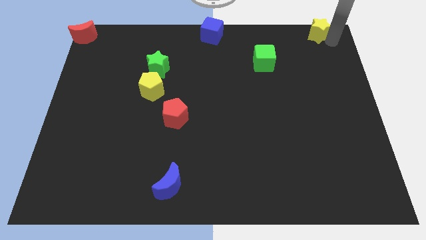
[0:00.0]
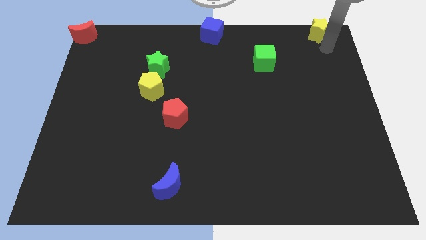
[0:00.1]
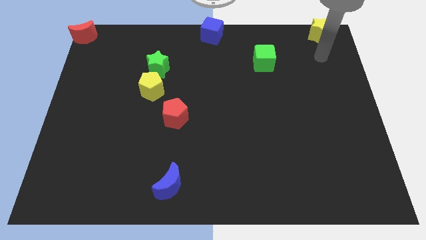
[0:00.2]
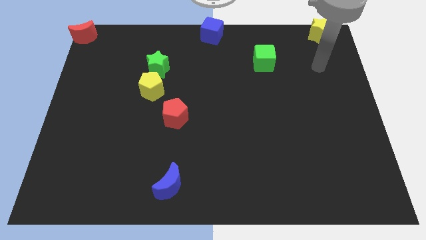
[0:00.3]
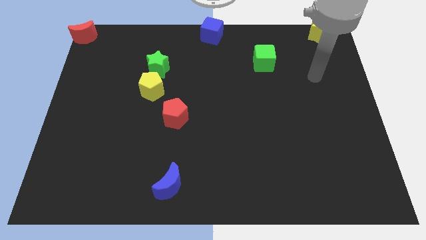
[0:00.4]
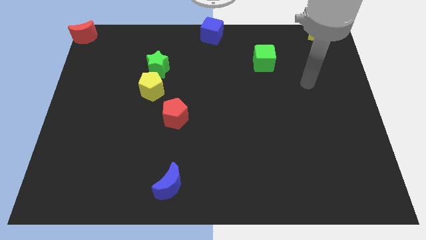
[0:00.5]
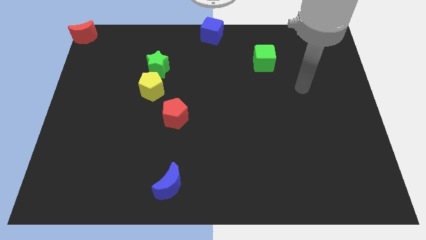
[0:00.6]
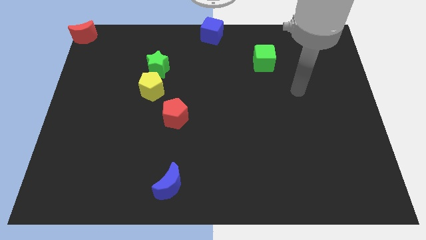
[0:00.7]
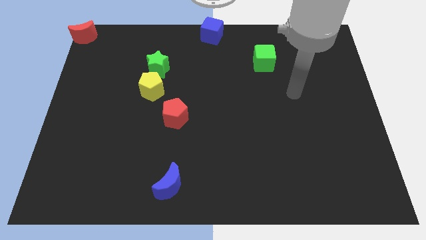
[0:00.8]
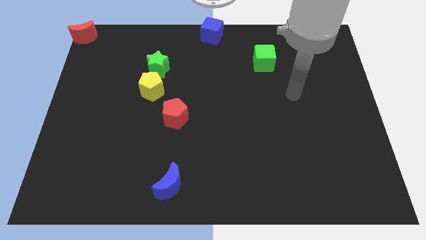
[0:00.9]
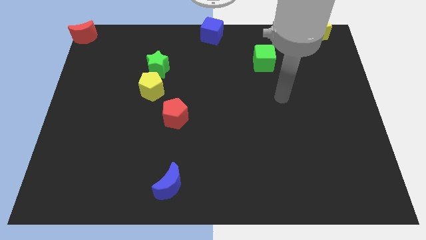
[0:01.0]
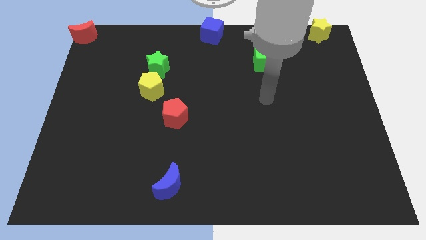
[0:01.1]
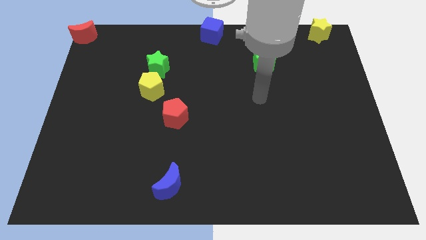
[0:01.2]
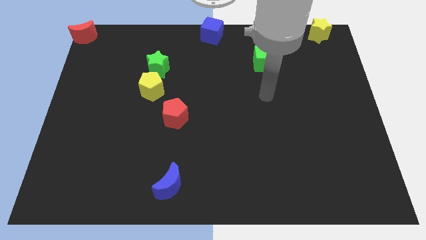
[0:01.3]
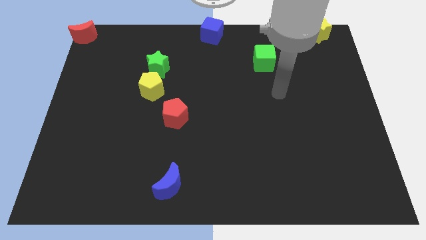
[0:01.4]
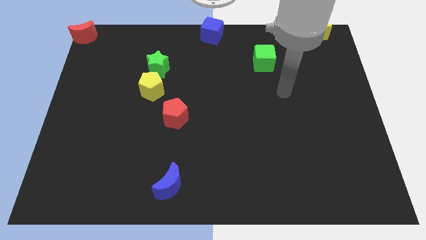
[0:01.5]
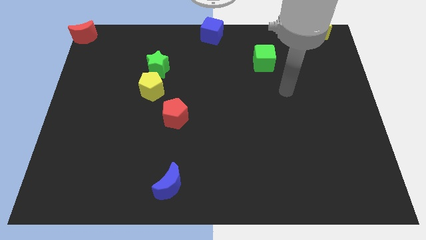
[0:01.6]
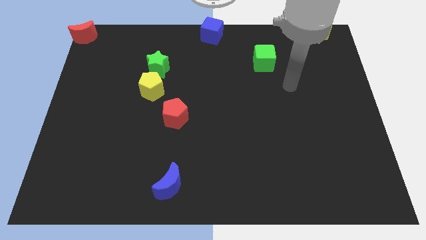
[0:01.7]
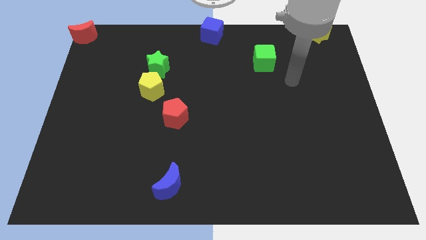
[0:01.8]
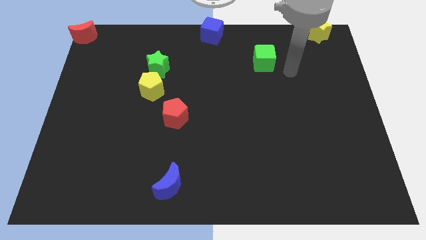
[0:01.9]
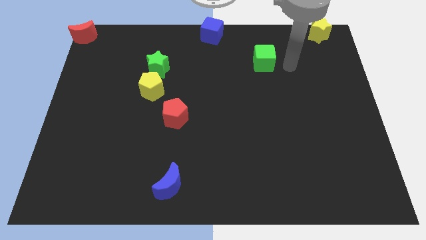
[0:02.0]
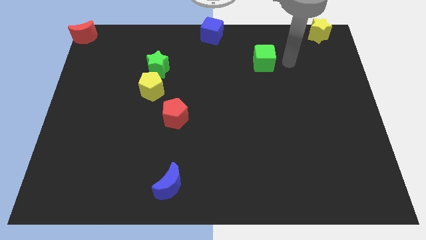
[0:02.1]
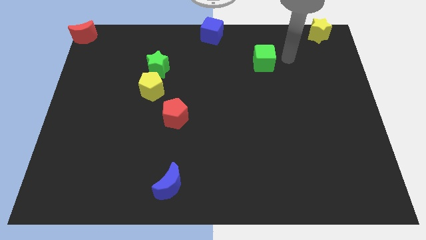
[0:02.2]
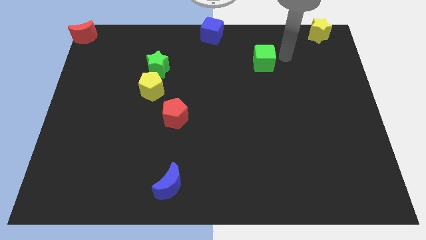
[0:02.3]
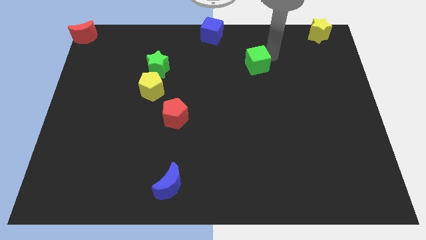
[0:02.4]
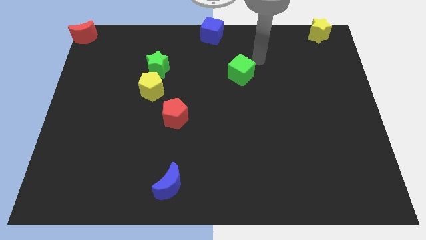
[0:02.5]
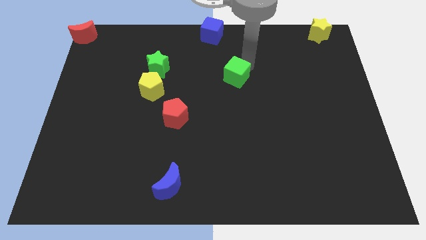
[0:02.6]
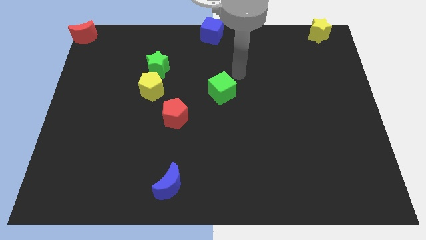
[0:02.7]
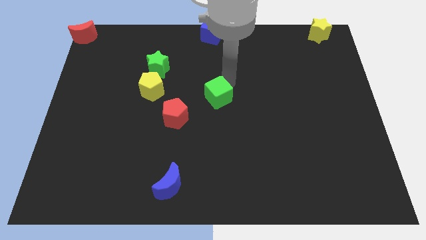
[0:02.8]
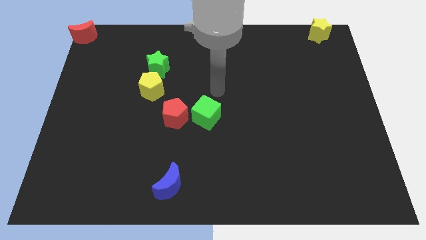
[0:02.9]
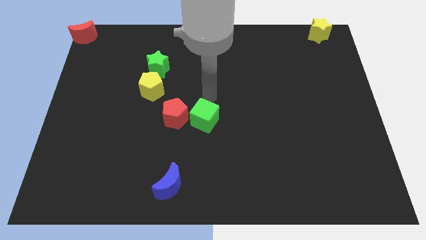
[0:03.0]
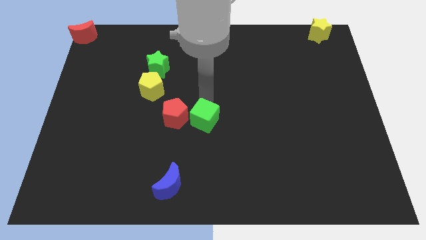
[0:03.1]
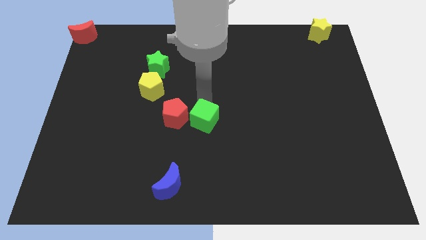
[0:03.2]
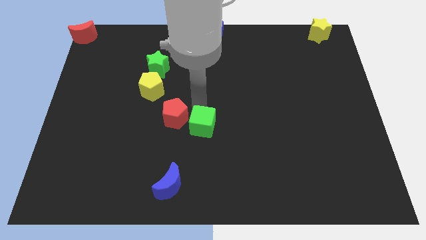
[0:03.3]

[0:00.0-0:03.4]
push the green cube to the right of the red penatgon

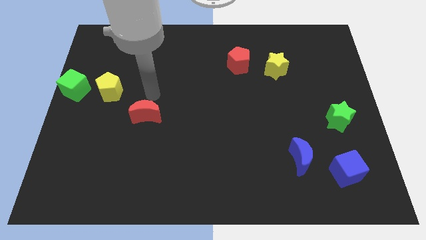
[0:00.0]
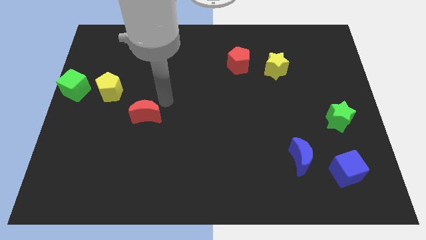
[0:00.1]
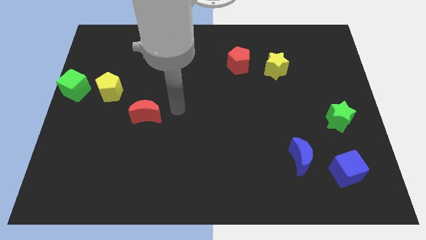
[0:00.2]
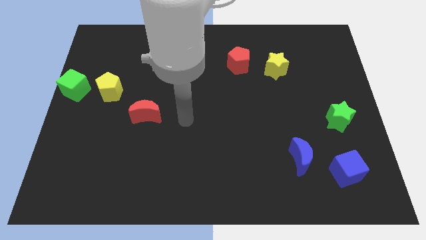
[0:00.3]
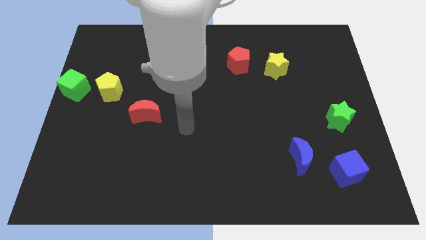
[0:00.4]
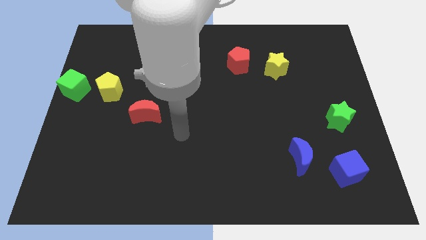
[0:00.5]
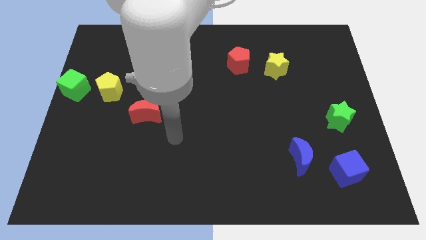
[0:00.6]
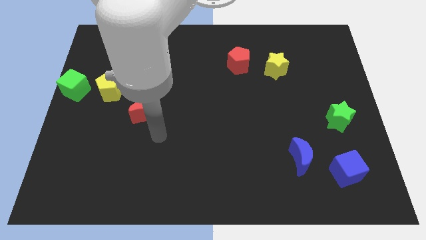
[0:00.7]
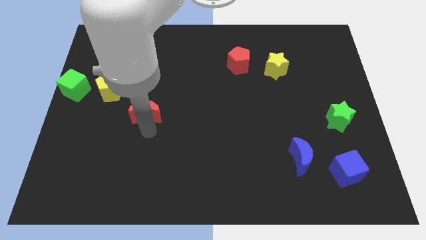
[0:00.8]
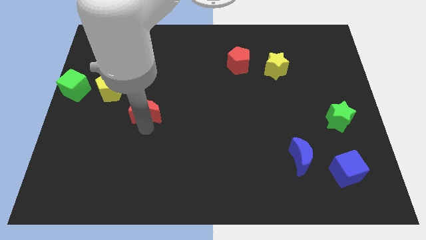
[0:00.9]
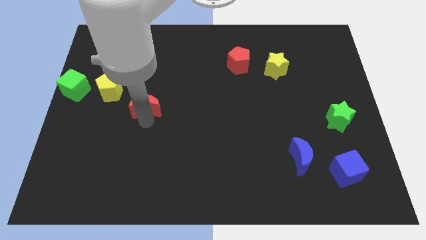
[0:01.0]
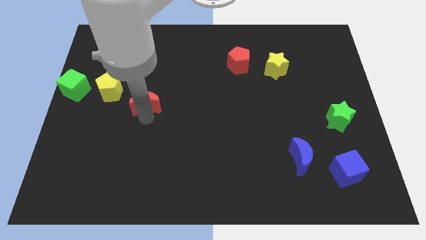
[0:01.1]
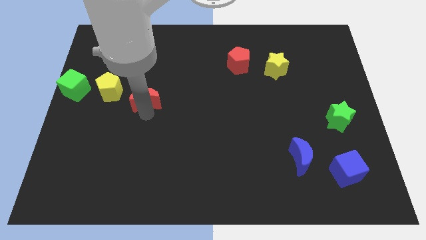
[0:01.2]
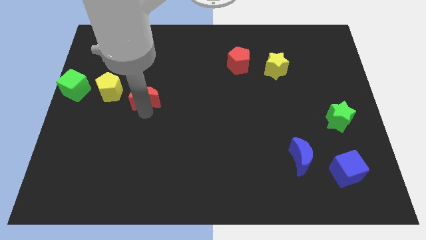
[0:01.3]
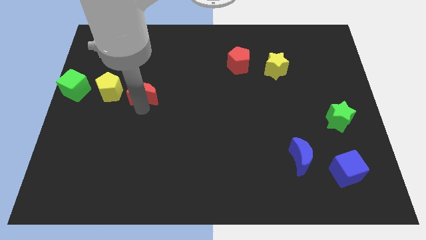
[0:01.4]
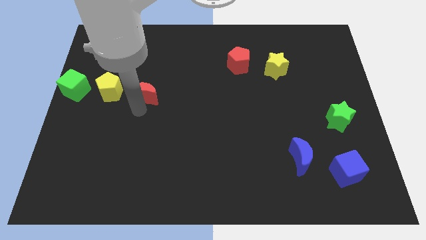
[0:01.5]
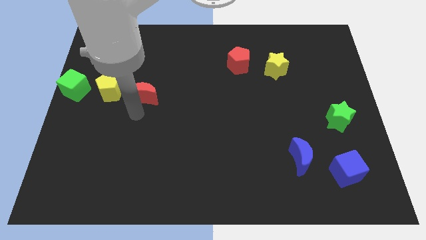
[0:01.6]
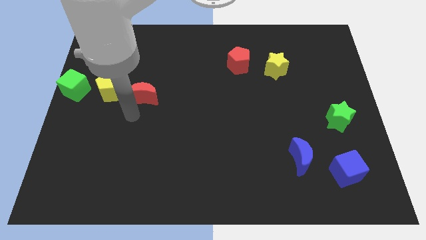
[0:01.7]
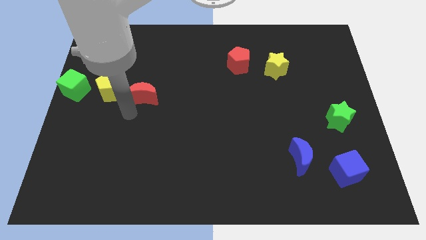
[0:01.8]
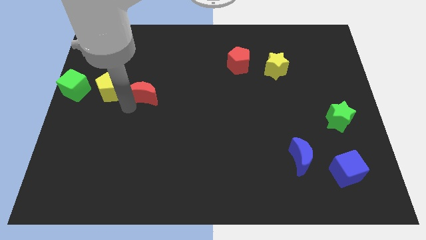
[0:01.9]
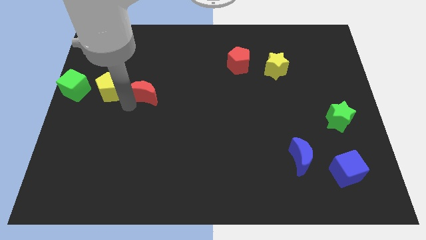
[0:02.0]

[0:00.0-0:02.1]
push the red crescent to the right of the yellow pentagon

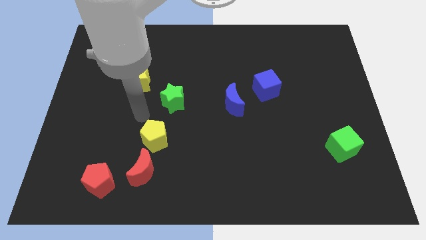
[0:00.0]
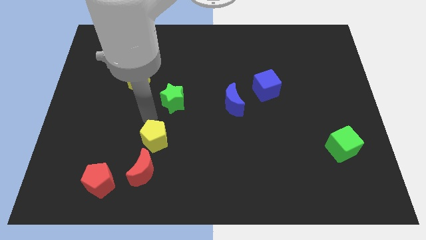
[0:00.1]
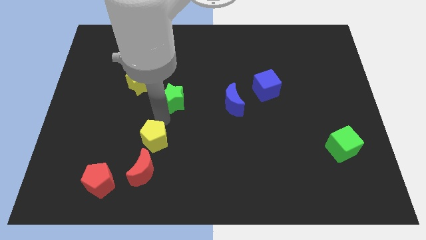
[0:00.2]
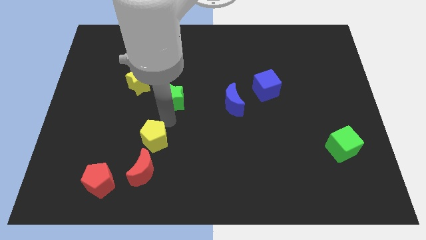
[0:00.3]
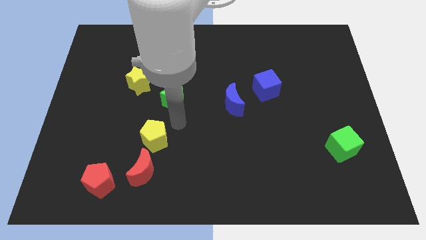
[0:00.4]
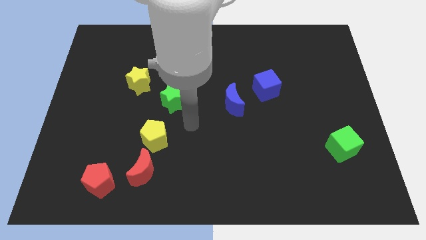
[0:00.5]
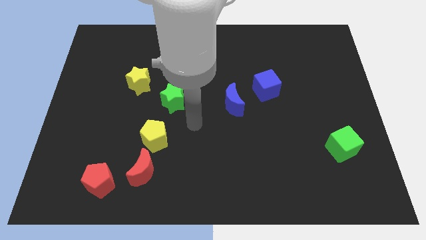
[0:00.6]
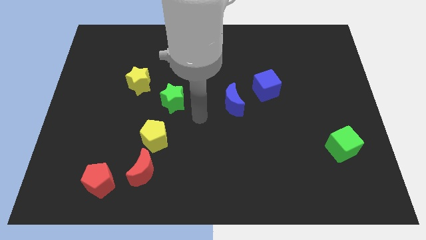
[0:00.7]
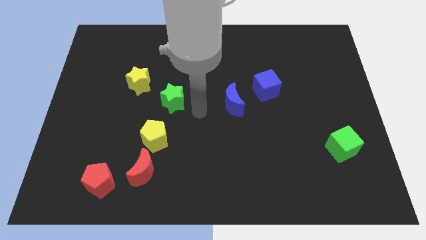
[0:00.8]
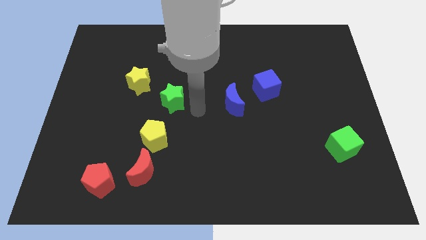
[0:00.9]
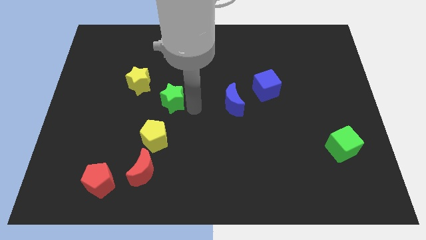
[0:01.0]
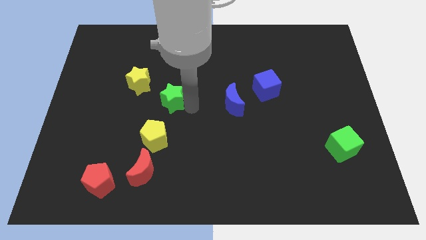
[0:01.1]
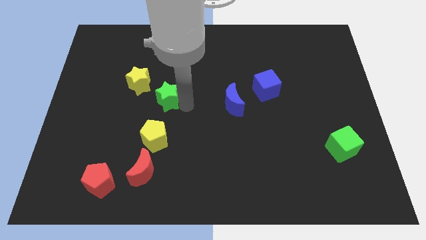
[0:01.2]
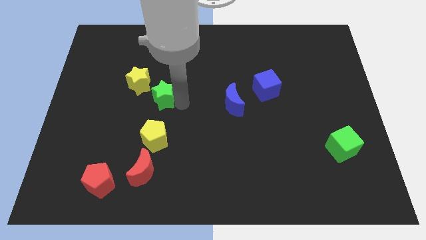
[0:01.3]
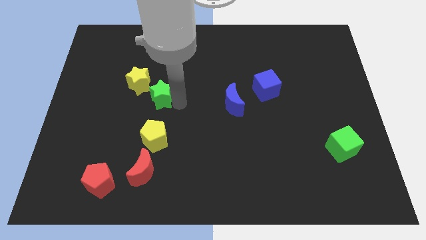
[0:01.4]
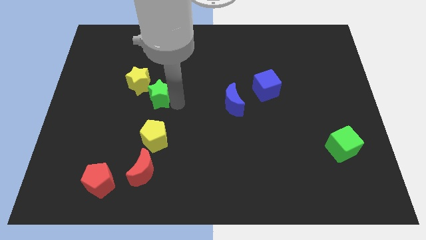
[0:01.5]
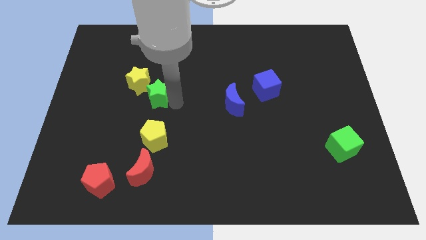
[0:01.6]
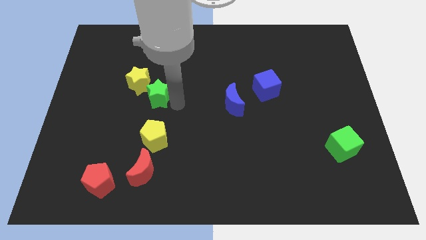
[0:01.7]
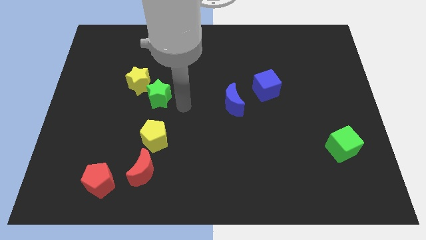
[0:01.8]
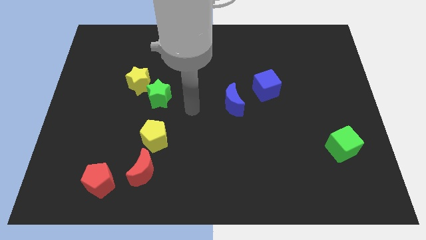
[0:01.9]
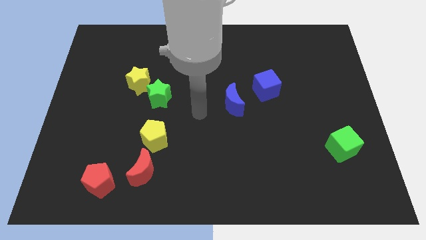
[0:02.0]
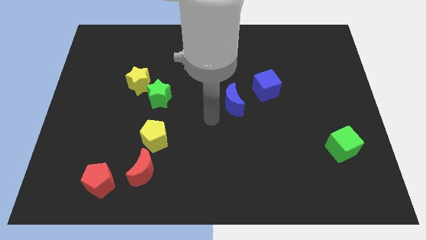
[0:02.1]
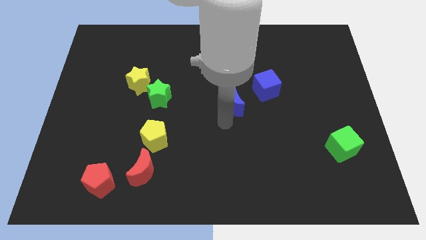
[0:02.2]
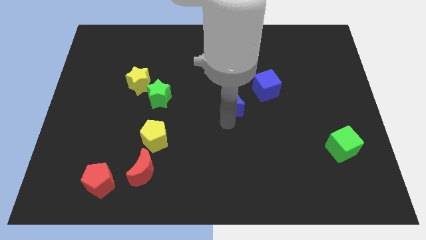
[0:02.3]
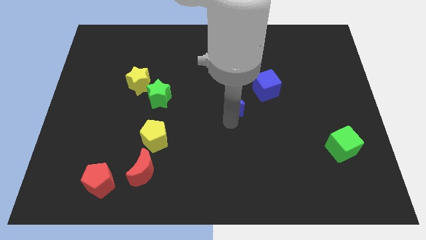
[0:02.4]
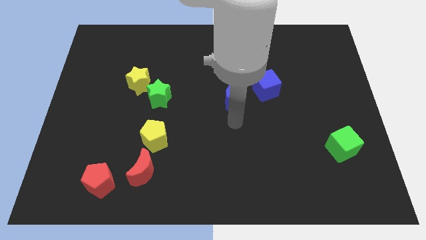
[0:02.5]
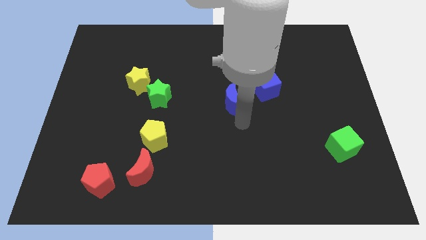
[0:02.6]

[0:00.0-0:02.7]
push the green star below the yellow star

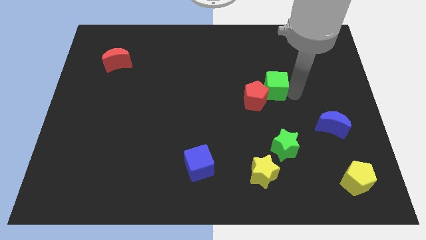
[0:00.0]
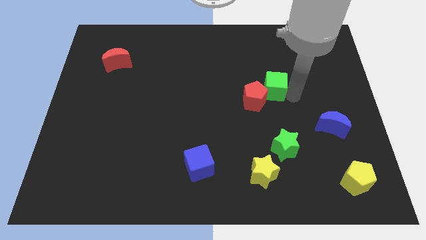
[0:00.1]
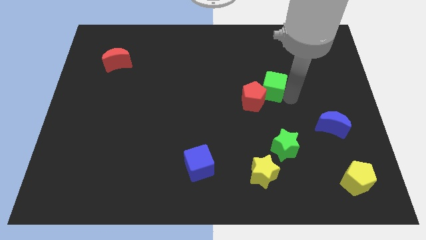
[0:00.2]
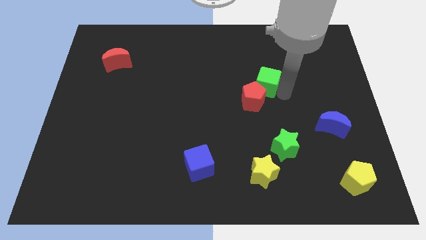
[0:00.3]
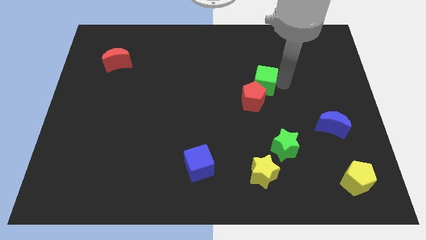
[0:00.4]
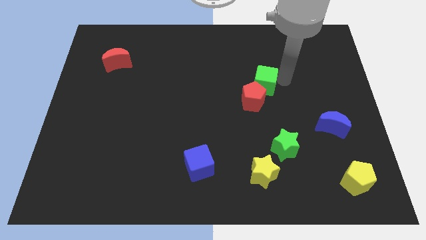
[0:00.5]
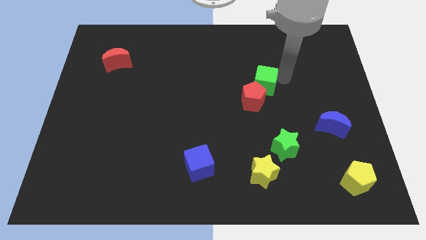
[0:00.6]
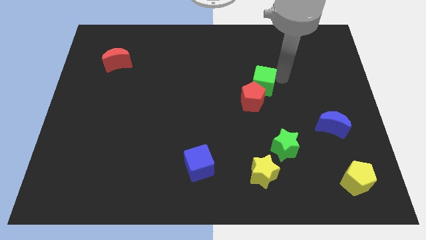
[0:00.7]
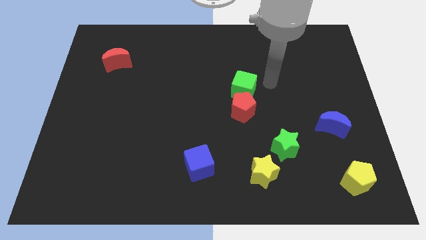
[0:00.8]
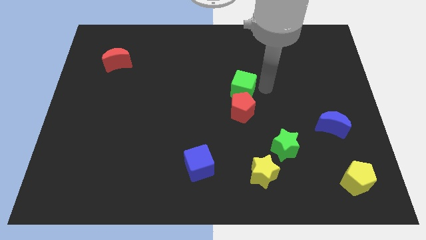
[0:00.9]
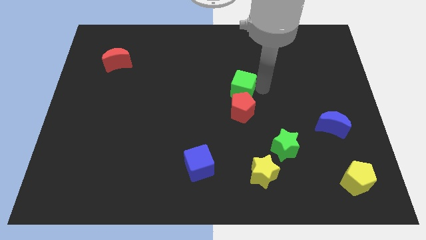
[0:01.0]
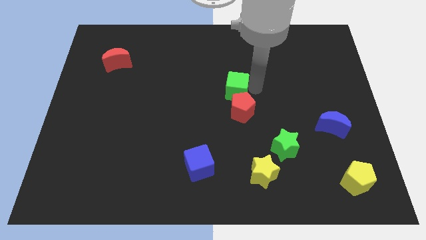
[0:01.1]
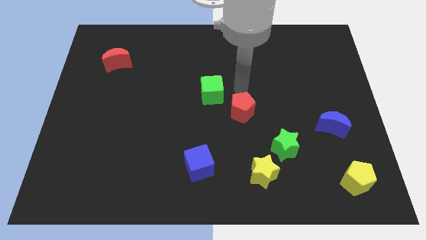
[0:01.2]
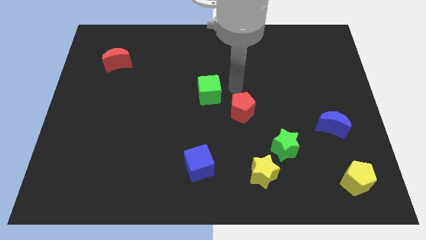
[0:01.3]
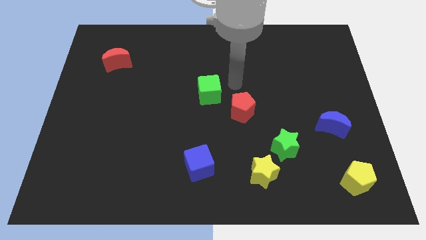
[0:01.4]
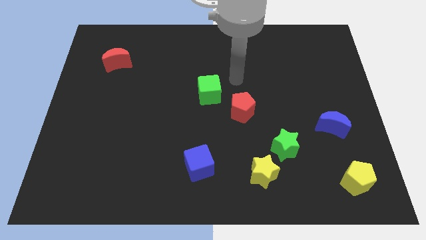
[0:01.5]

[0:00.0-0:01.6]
separate the green cube from red pentagon
